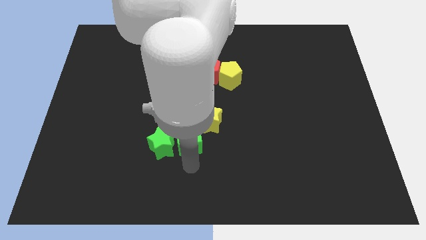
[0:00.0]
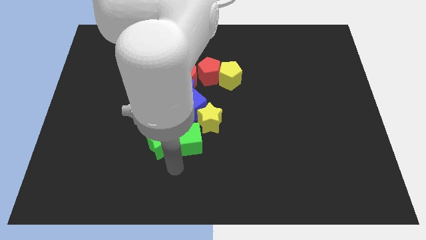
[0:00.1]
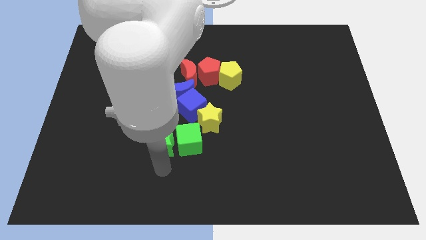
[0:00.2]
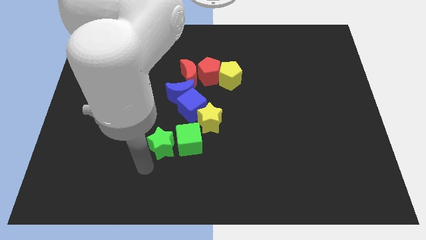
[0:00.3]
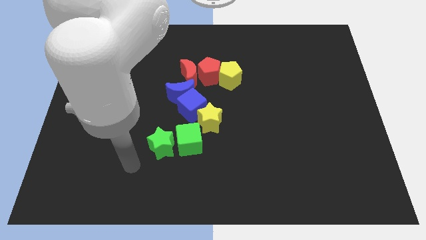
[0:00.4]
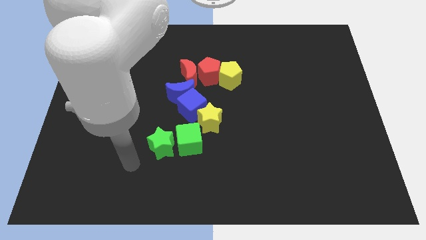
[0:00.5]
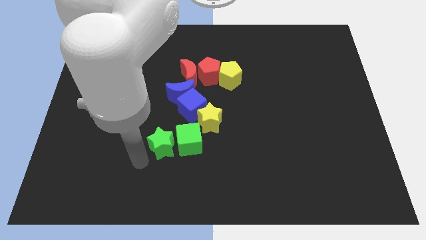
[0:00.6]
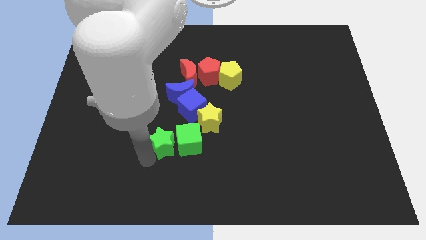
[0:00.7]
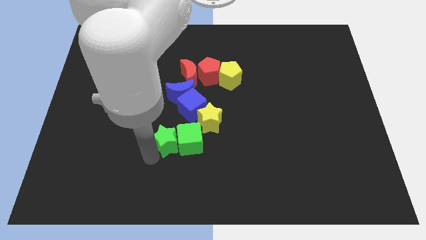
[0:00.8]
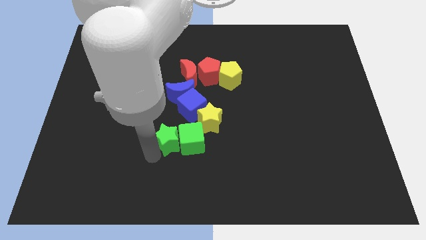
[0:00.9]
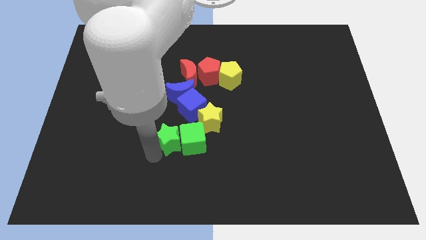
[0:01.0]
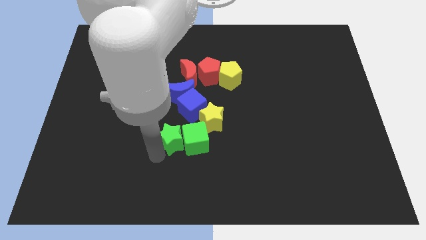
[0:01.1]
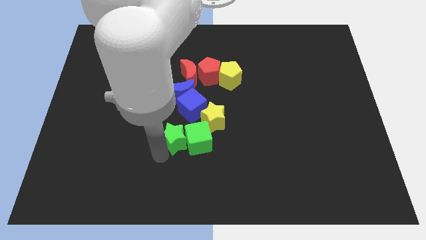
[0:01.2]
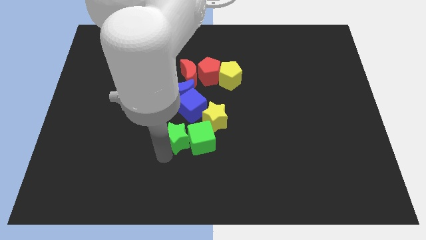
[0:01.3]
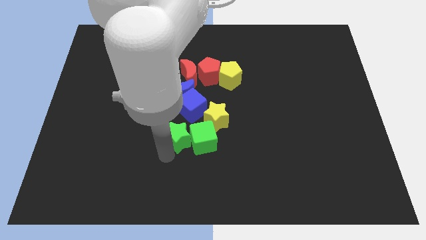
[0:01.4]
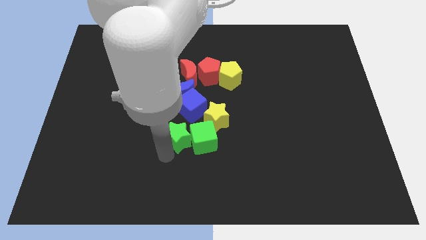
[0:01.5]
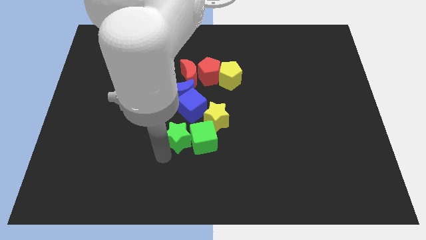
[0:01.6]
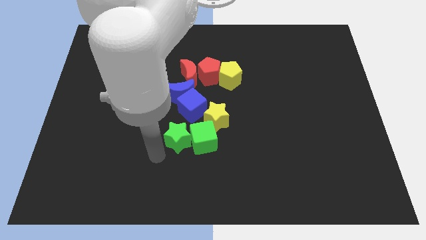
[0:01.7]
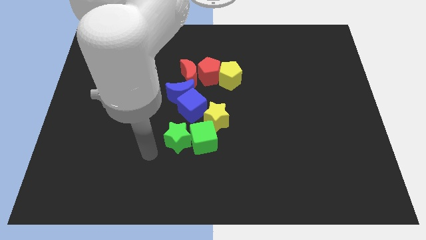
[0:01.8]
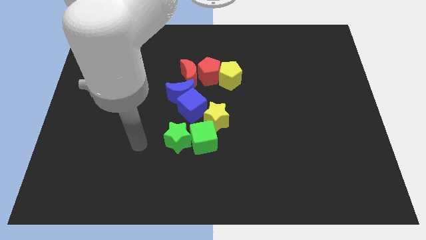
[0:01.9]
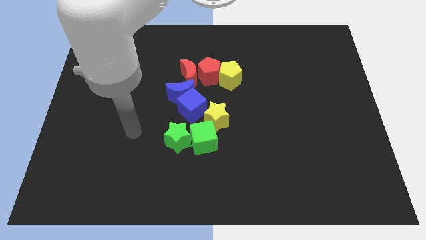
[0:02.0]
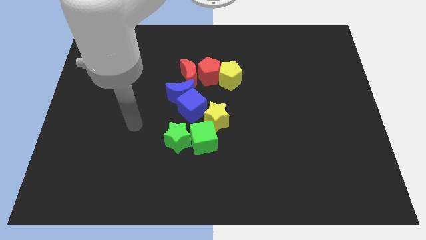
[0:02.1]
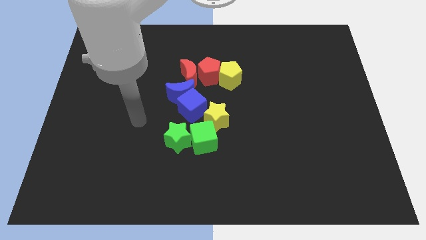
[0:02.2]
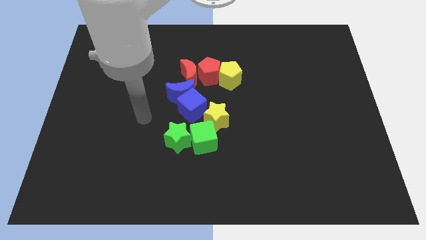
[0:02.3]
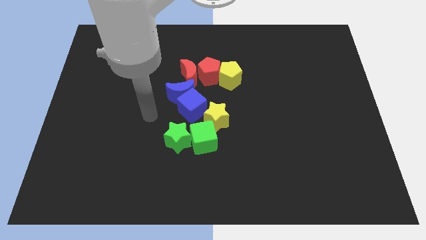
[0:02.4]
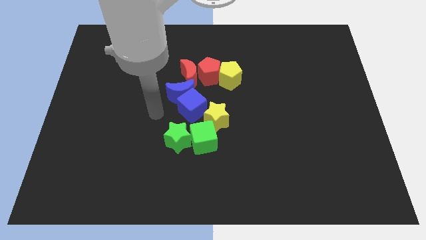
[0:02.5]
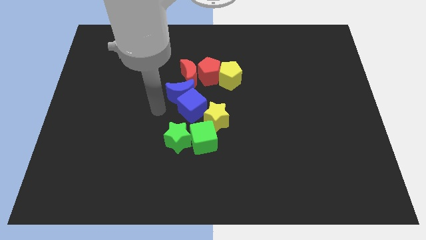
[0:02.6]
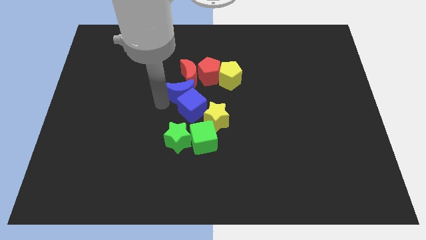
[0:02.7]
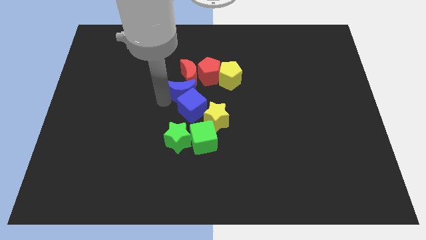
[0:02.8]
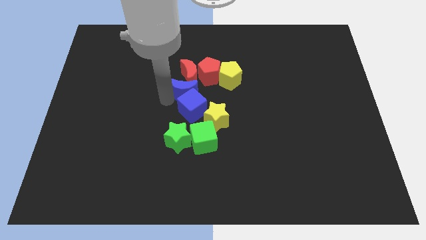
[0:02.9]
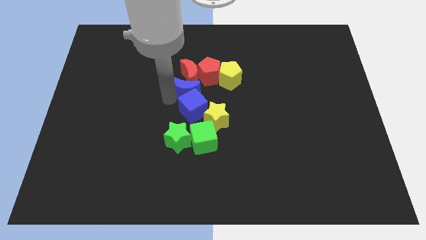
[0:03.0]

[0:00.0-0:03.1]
place green star and green block below the blue block

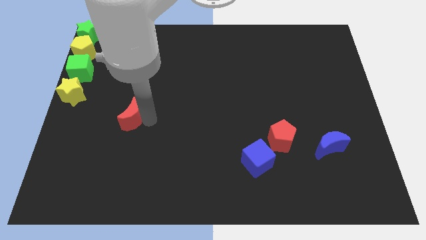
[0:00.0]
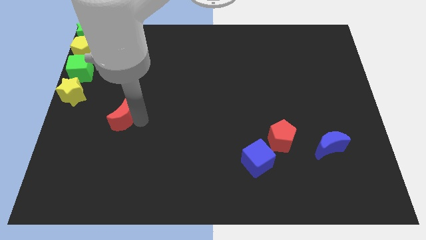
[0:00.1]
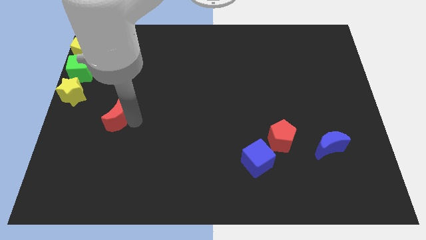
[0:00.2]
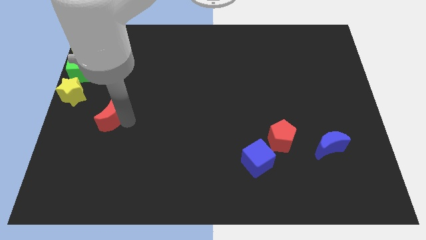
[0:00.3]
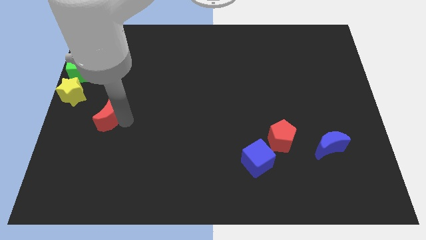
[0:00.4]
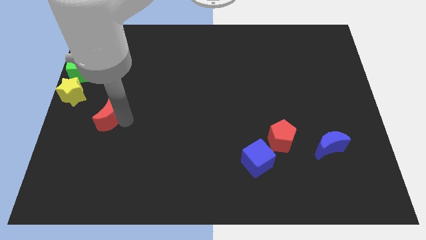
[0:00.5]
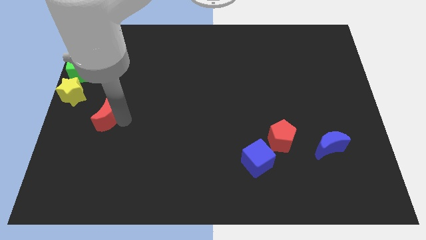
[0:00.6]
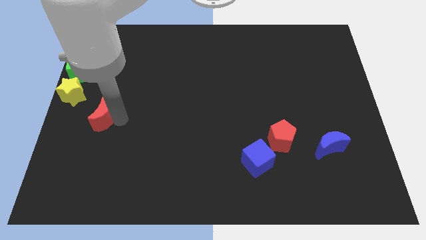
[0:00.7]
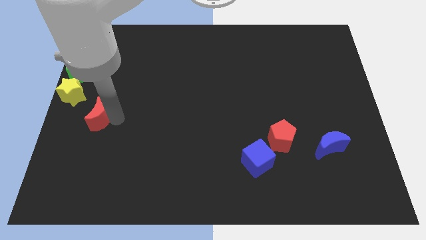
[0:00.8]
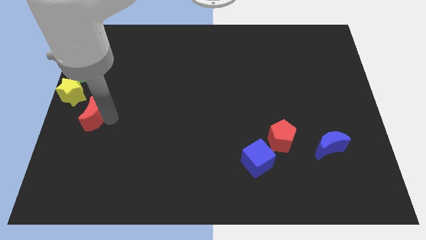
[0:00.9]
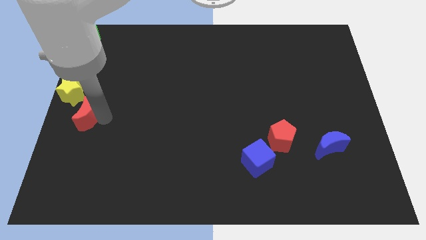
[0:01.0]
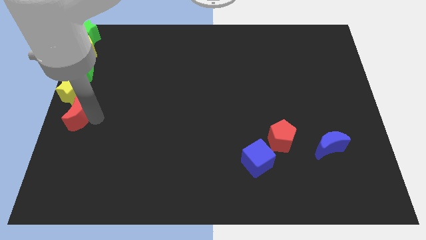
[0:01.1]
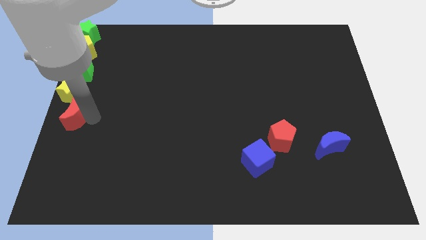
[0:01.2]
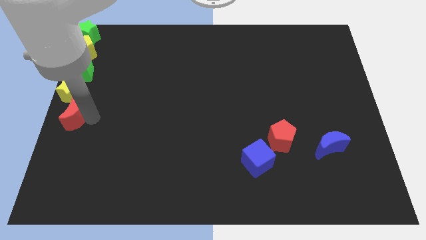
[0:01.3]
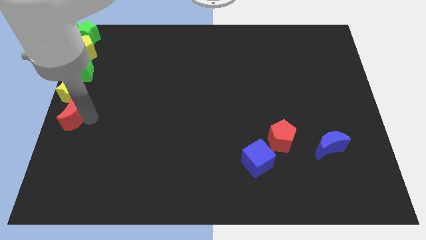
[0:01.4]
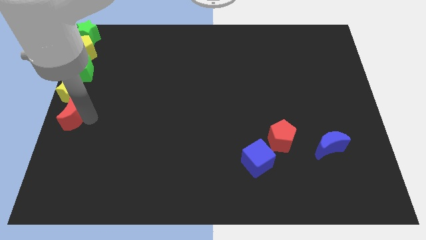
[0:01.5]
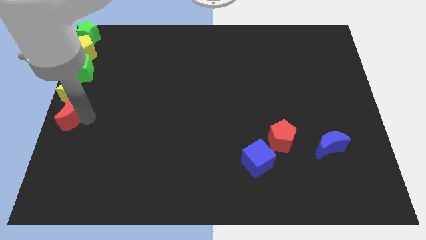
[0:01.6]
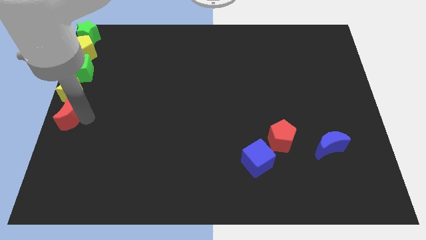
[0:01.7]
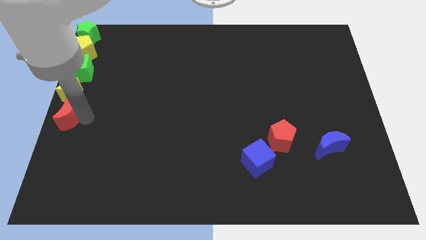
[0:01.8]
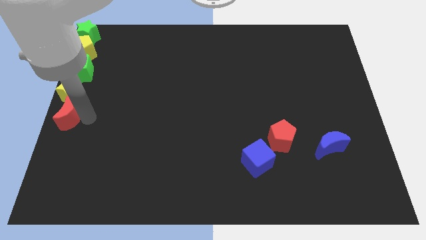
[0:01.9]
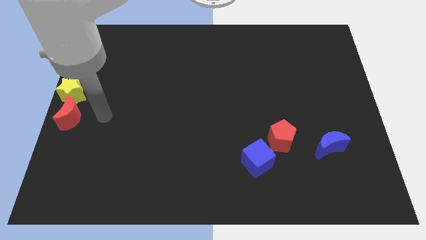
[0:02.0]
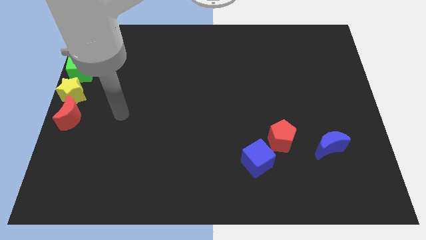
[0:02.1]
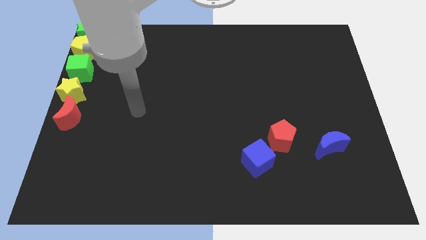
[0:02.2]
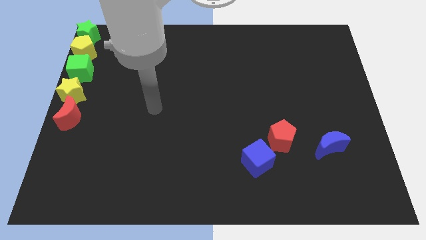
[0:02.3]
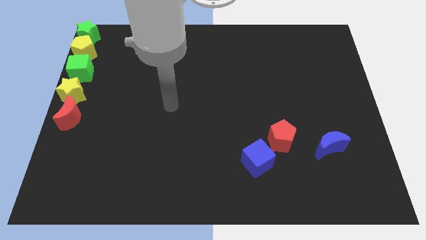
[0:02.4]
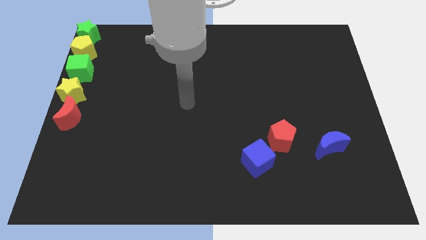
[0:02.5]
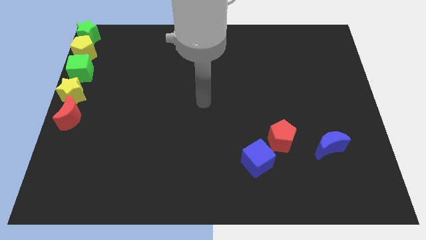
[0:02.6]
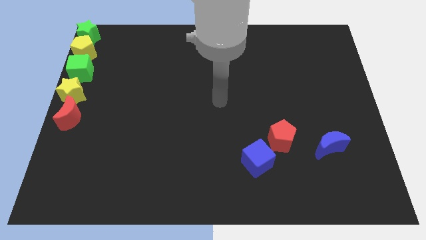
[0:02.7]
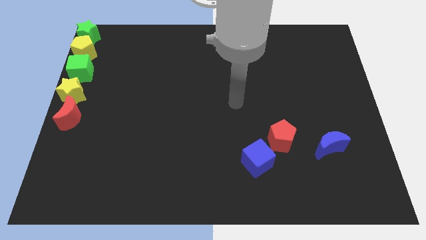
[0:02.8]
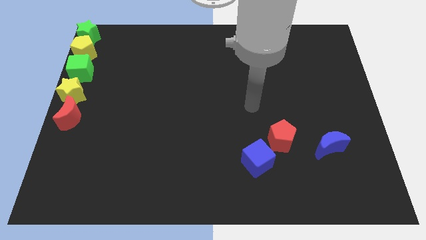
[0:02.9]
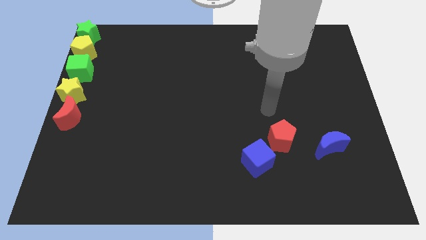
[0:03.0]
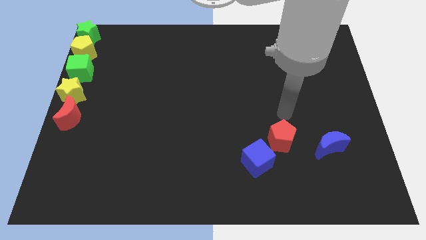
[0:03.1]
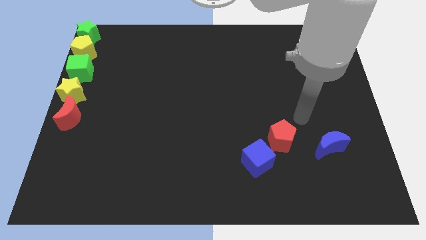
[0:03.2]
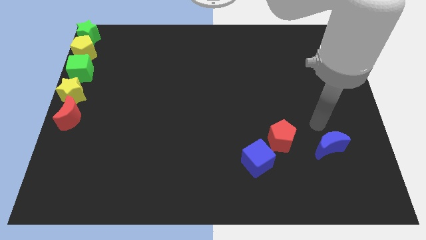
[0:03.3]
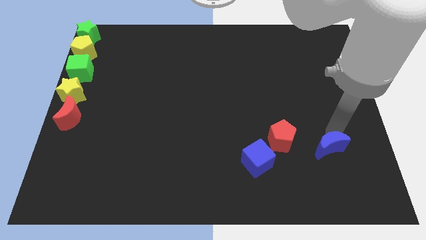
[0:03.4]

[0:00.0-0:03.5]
move red crescent below the yellow star

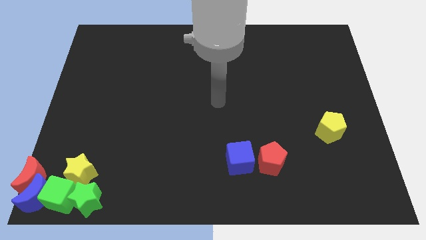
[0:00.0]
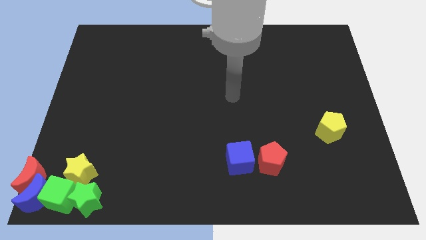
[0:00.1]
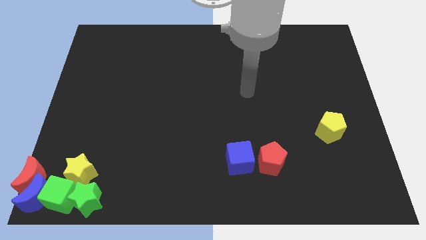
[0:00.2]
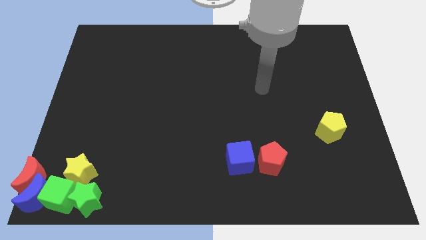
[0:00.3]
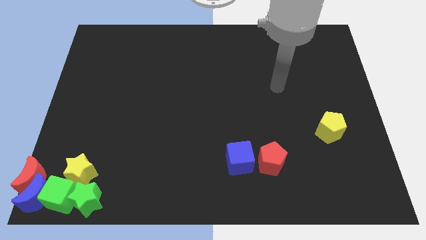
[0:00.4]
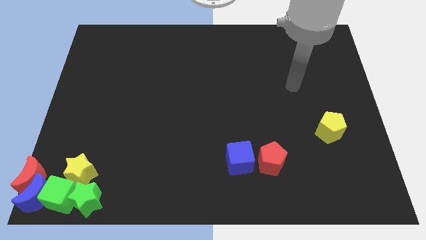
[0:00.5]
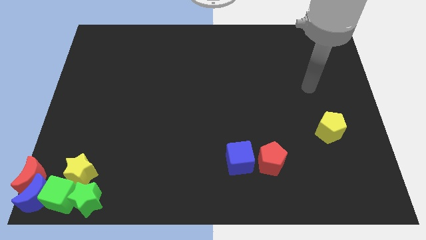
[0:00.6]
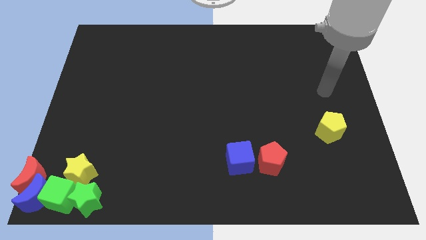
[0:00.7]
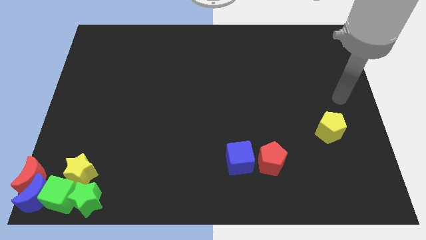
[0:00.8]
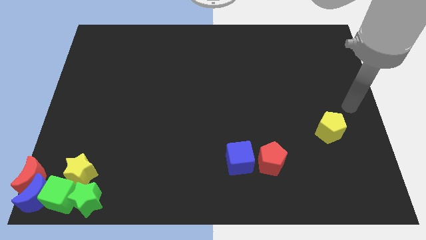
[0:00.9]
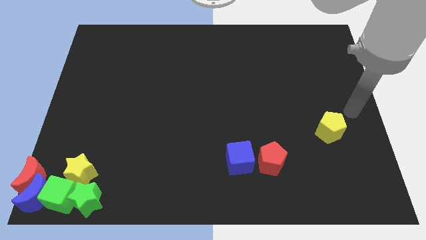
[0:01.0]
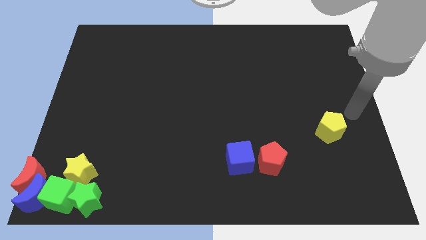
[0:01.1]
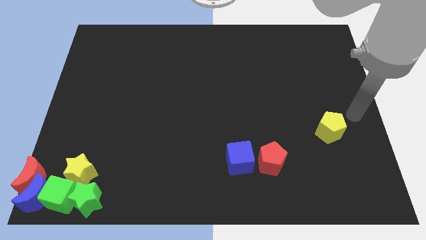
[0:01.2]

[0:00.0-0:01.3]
move your arm to the top right of yellow pentagon

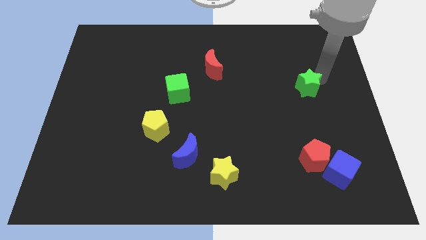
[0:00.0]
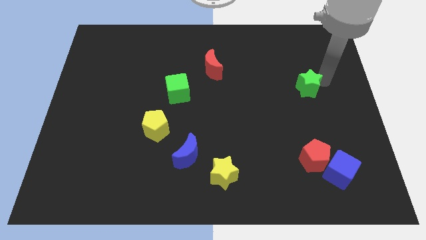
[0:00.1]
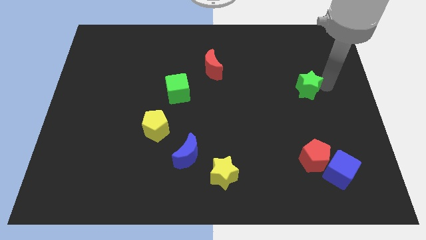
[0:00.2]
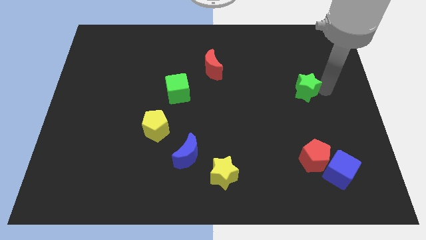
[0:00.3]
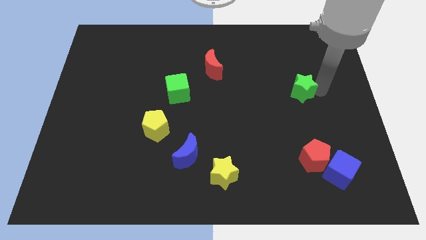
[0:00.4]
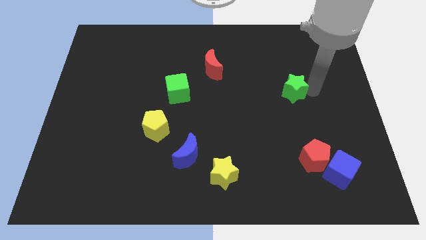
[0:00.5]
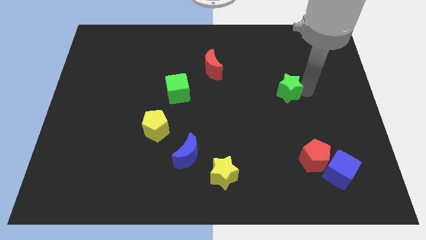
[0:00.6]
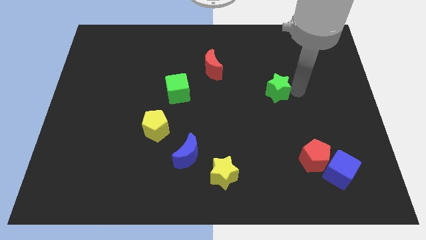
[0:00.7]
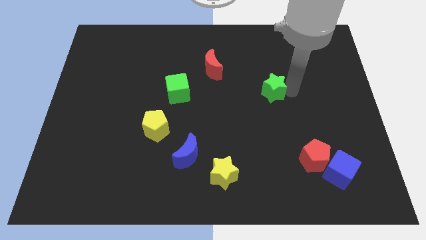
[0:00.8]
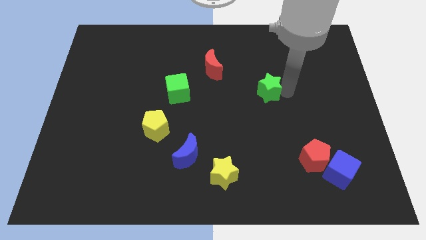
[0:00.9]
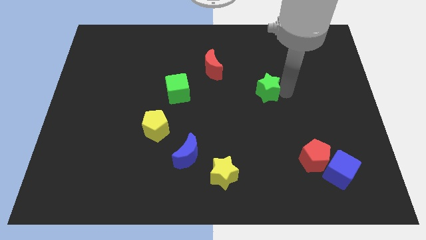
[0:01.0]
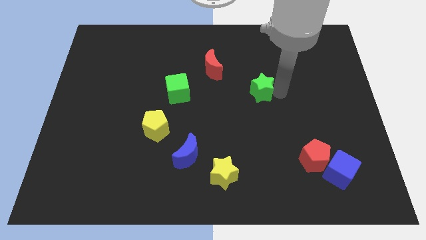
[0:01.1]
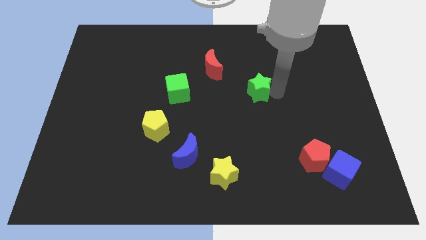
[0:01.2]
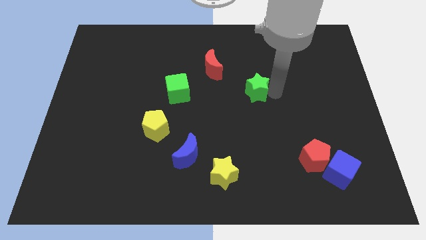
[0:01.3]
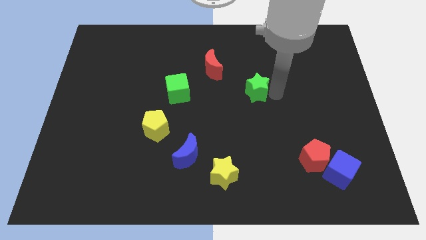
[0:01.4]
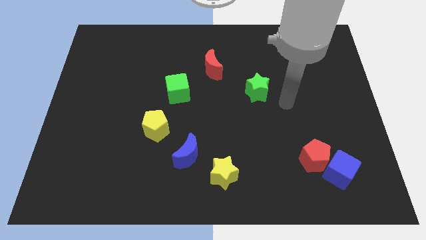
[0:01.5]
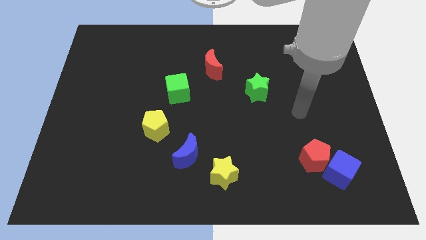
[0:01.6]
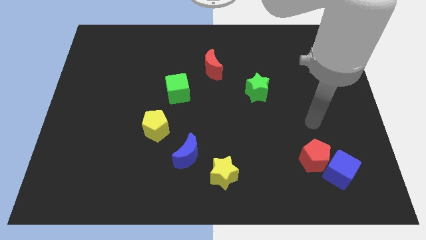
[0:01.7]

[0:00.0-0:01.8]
slide the green star towards the left
